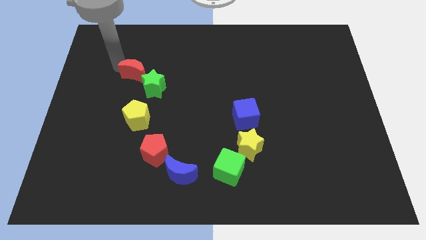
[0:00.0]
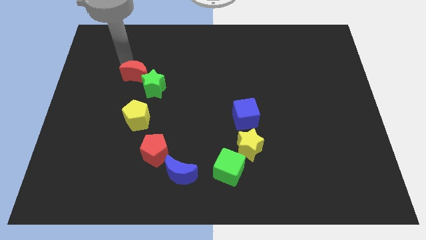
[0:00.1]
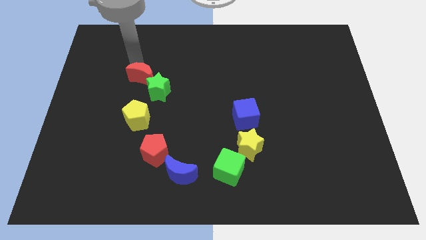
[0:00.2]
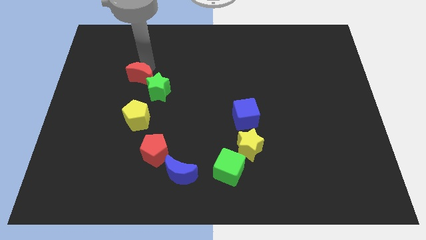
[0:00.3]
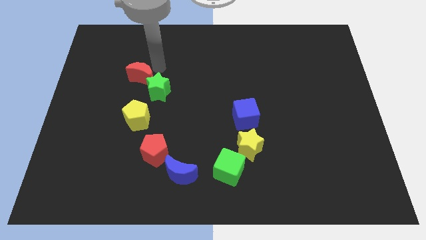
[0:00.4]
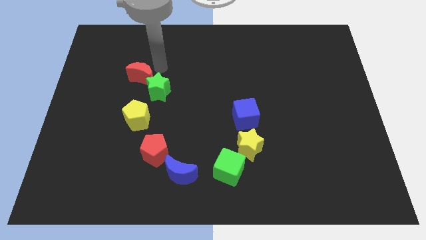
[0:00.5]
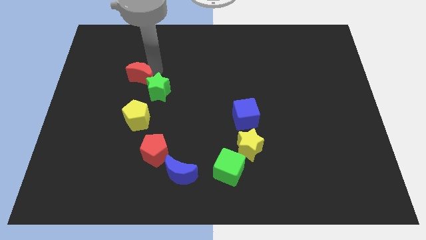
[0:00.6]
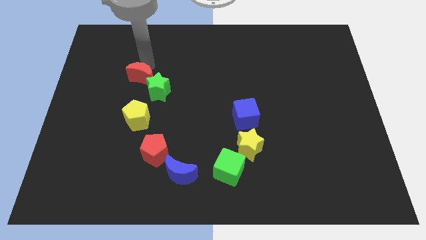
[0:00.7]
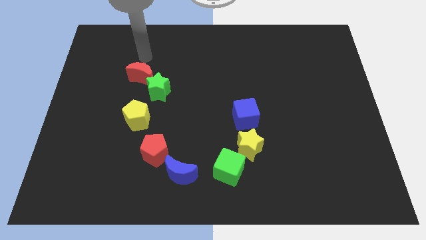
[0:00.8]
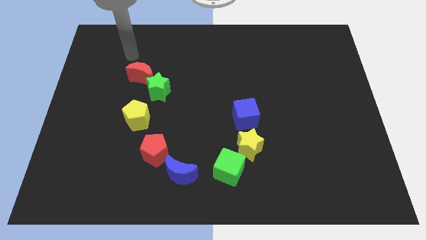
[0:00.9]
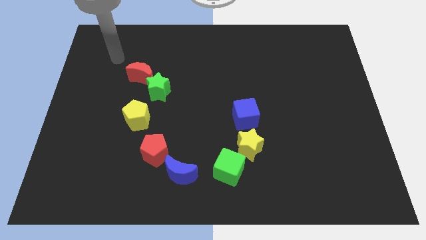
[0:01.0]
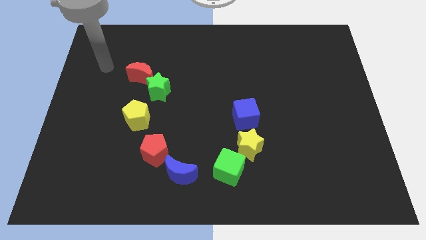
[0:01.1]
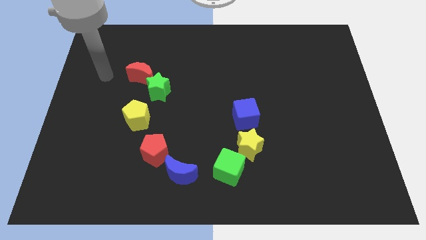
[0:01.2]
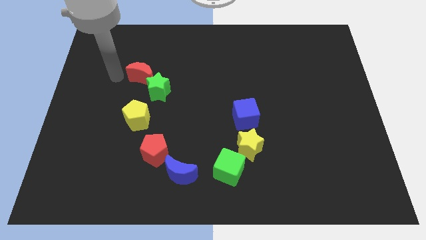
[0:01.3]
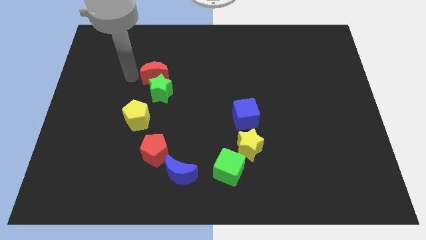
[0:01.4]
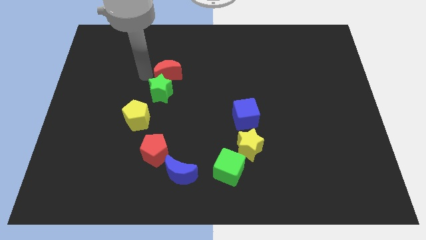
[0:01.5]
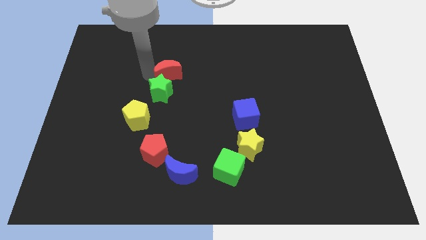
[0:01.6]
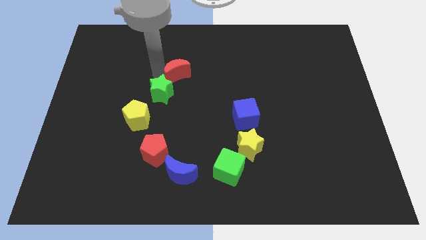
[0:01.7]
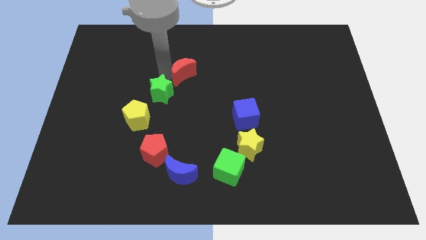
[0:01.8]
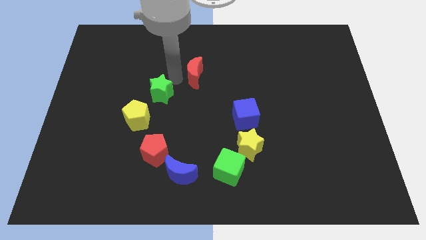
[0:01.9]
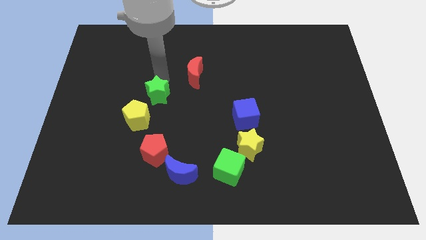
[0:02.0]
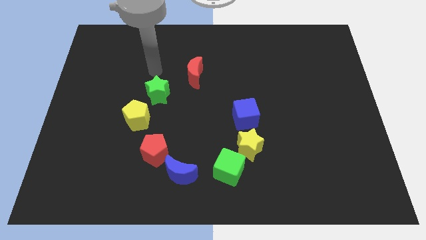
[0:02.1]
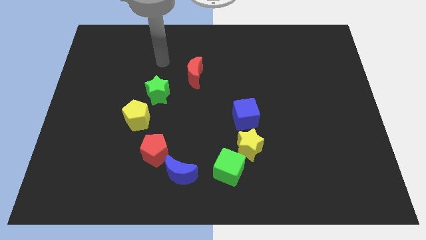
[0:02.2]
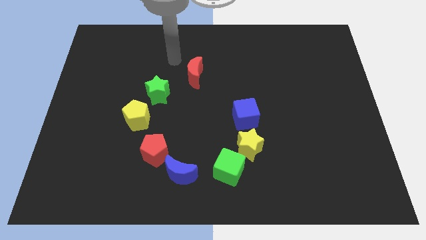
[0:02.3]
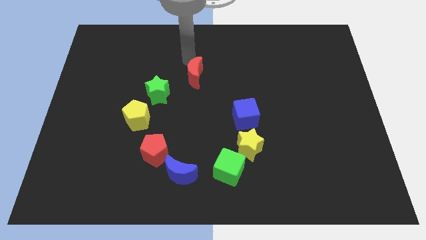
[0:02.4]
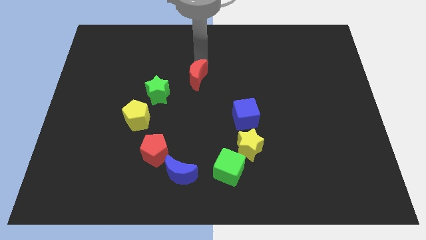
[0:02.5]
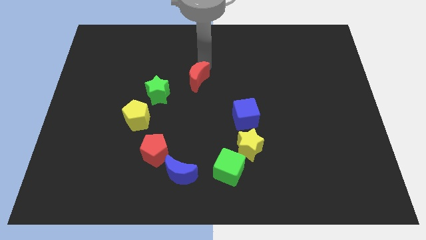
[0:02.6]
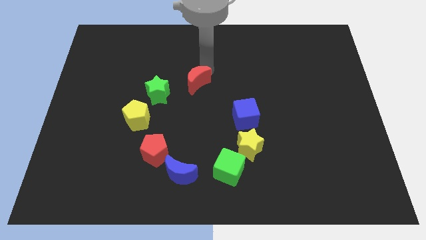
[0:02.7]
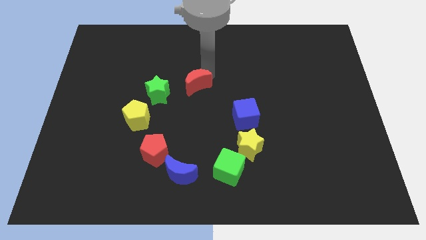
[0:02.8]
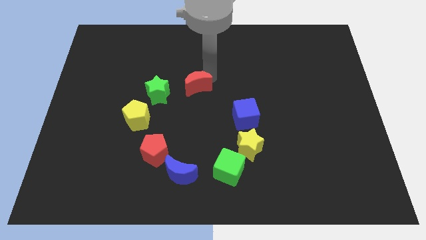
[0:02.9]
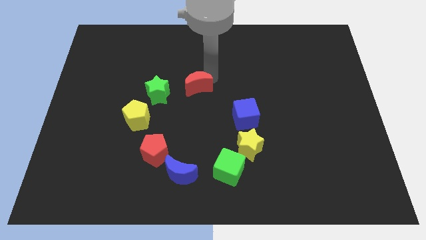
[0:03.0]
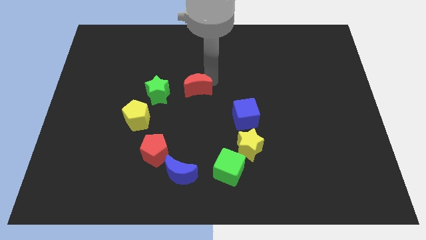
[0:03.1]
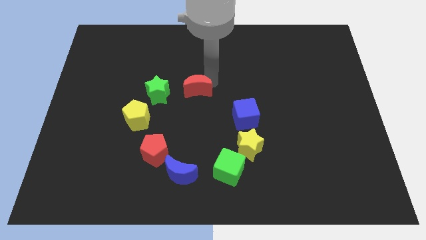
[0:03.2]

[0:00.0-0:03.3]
push the red moon to the right

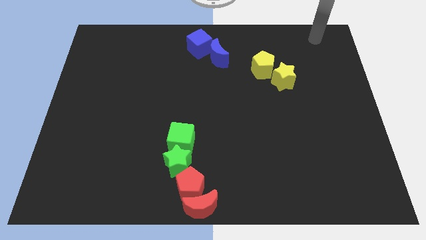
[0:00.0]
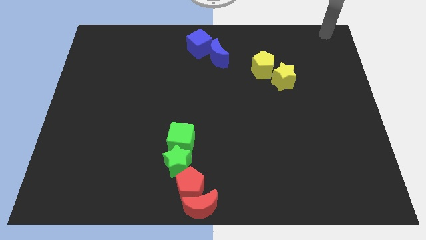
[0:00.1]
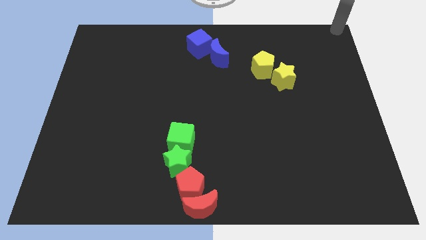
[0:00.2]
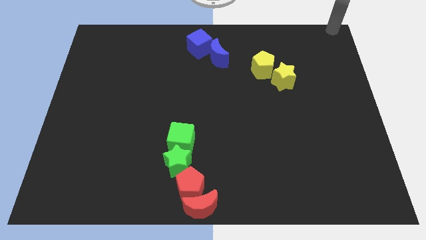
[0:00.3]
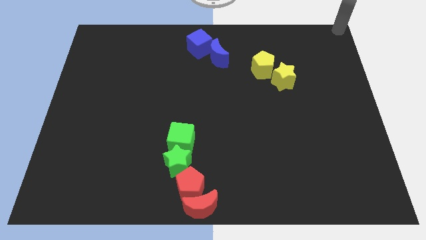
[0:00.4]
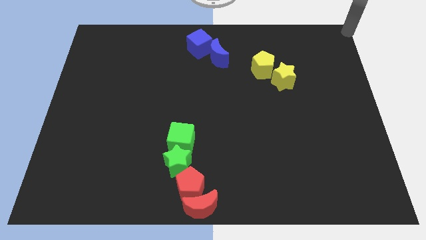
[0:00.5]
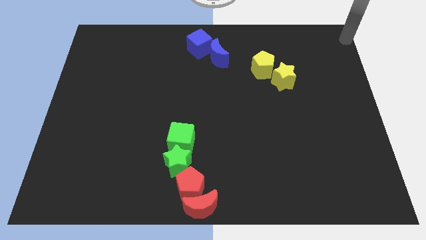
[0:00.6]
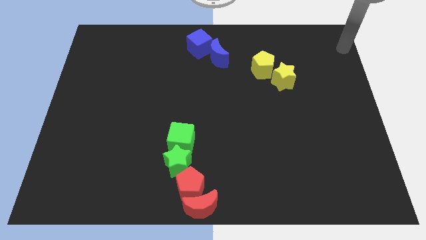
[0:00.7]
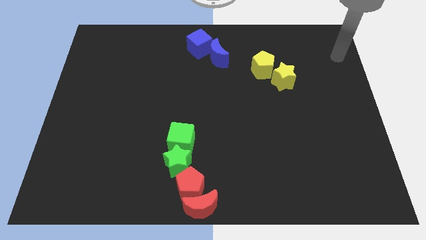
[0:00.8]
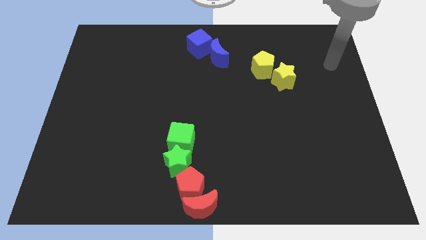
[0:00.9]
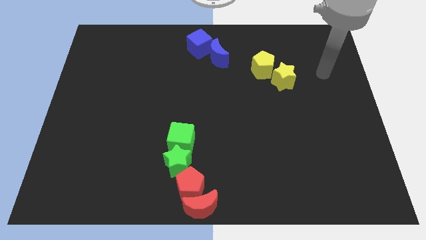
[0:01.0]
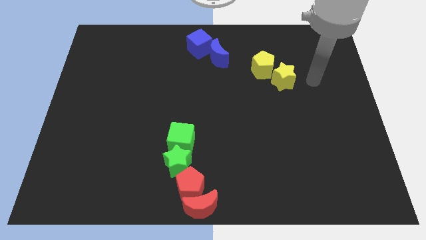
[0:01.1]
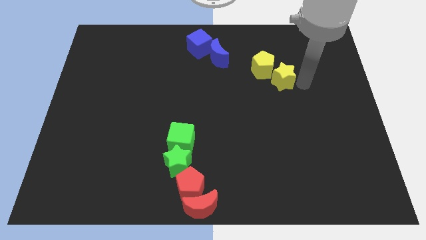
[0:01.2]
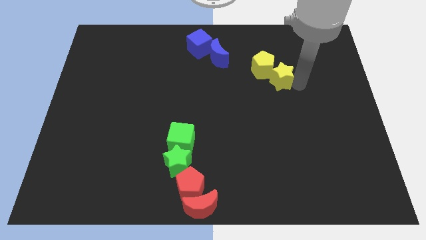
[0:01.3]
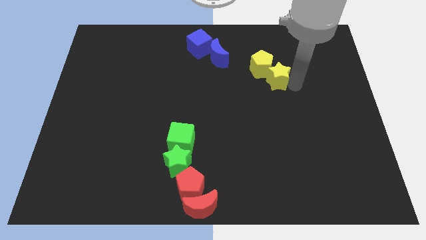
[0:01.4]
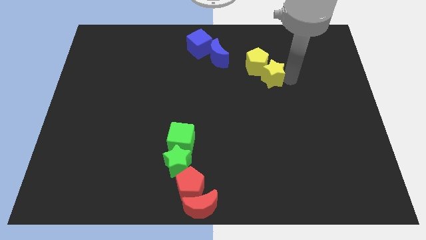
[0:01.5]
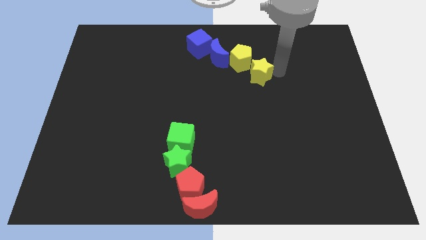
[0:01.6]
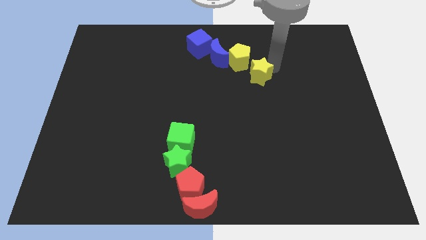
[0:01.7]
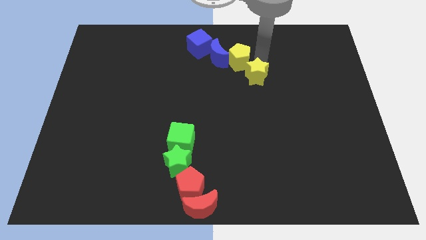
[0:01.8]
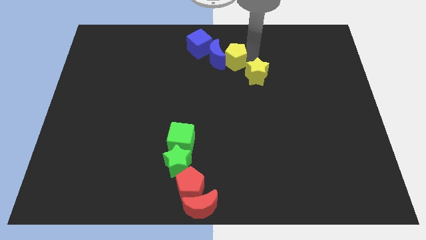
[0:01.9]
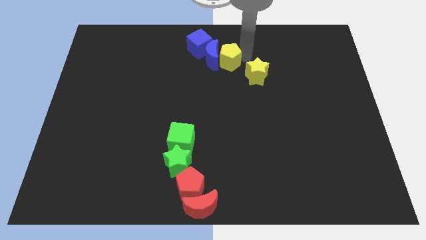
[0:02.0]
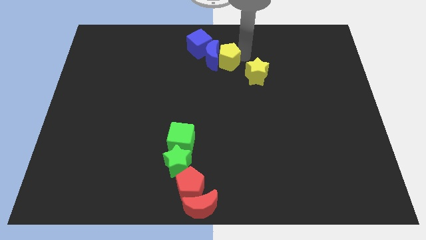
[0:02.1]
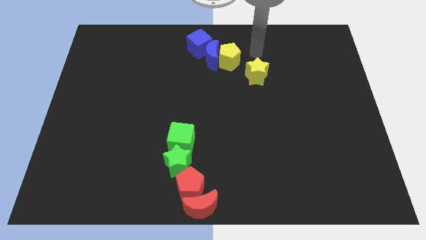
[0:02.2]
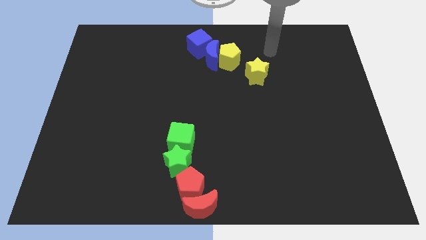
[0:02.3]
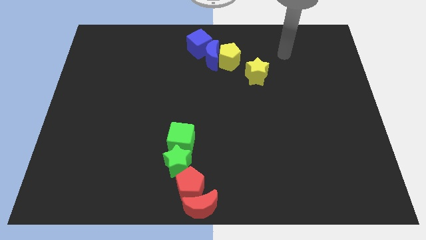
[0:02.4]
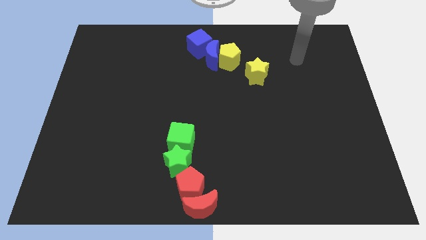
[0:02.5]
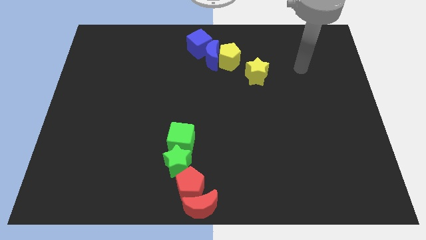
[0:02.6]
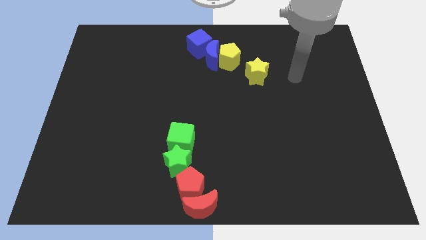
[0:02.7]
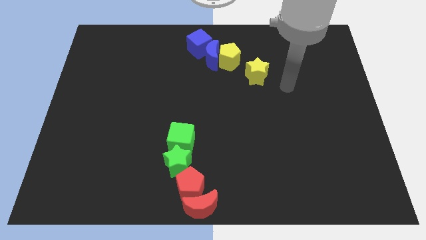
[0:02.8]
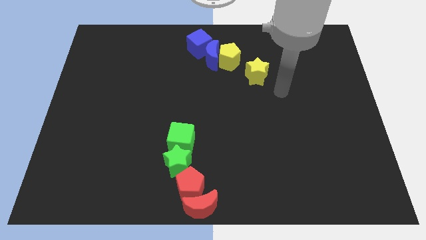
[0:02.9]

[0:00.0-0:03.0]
move yellow pentagon into the blue moon

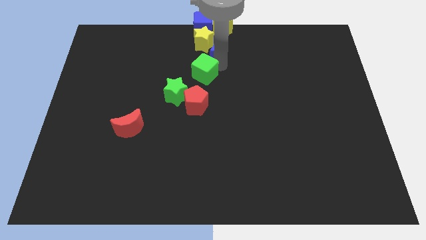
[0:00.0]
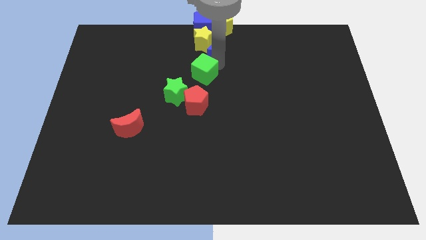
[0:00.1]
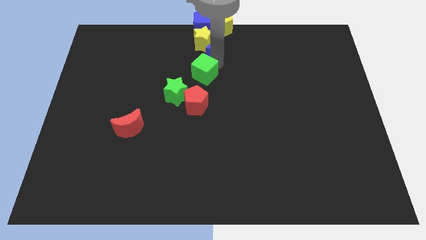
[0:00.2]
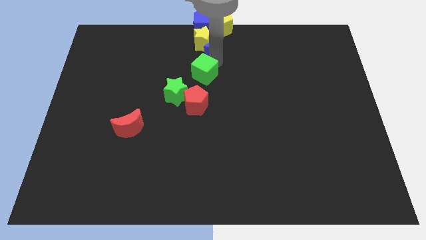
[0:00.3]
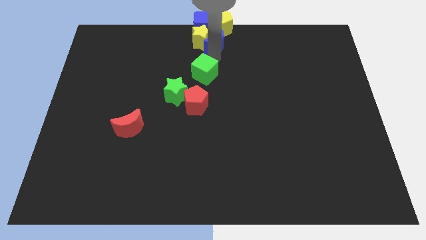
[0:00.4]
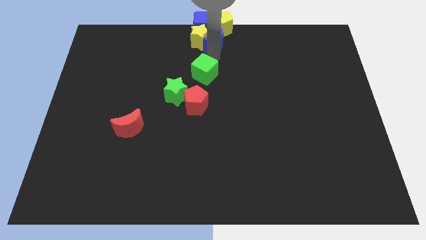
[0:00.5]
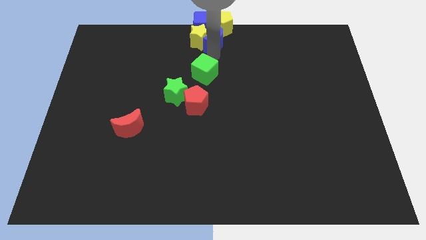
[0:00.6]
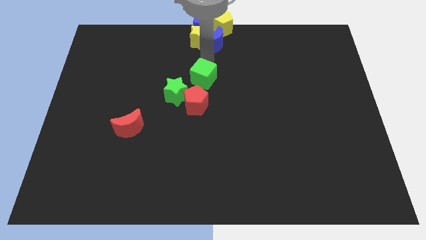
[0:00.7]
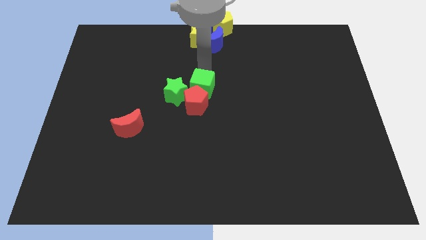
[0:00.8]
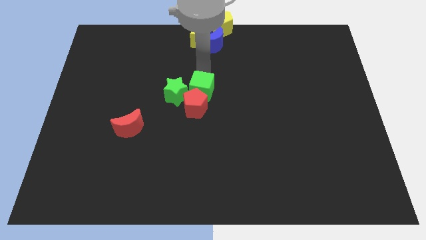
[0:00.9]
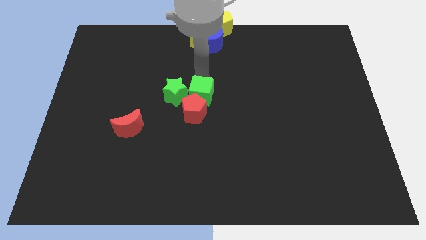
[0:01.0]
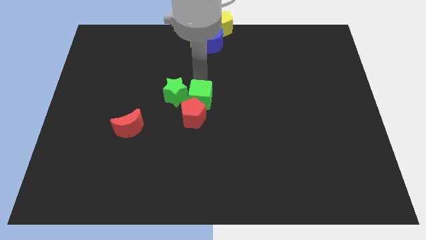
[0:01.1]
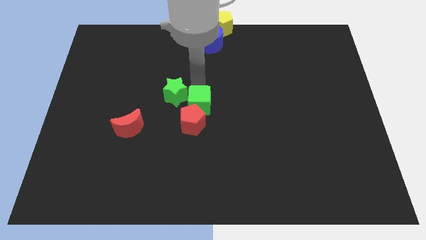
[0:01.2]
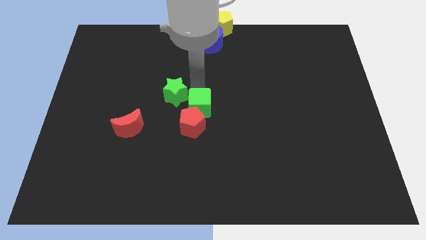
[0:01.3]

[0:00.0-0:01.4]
push the blue moon to the yellow star

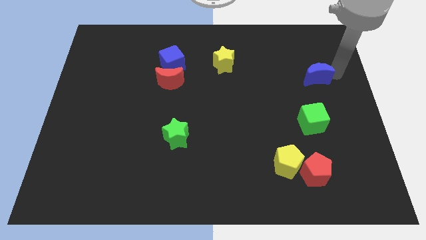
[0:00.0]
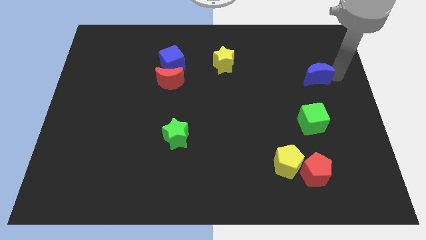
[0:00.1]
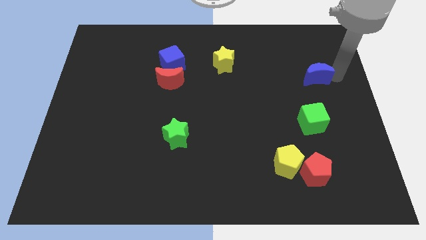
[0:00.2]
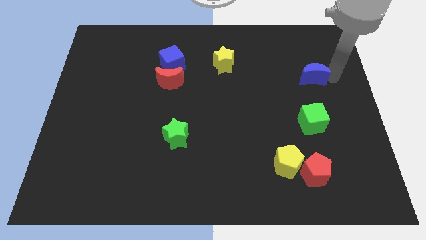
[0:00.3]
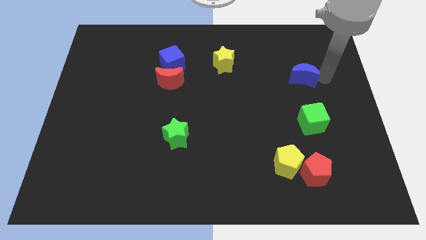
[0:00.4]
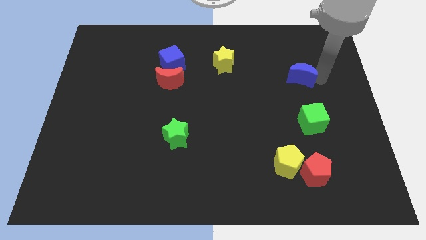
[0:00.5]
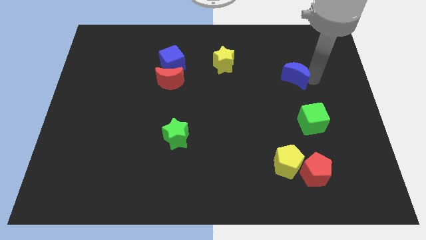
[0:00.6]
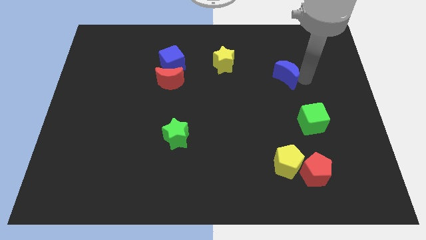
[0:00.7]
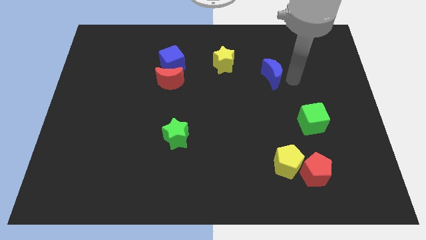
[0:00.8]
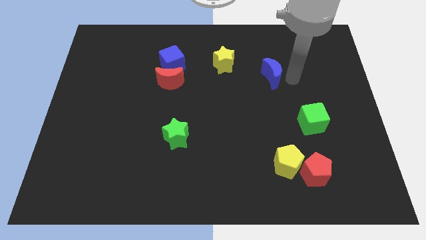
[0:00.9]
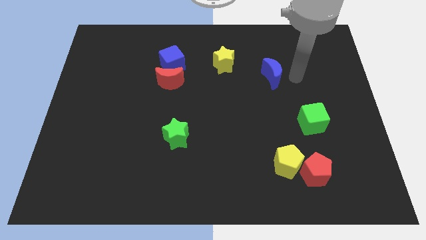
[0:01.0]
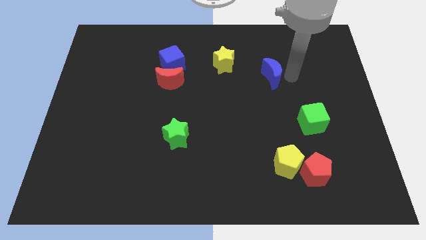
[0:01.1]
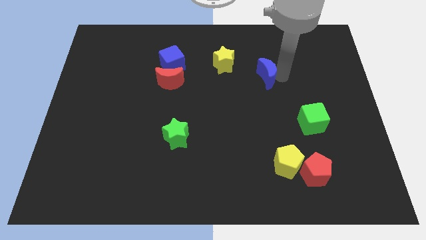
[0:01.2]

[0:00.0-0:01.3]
push the blue crescent to the left
